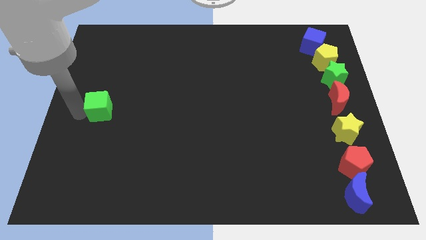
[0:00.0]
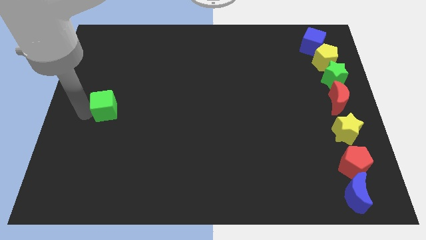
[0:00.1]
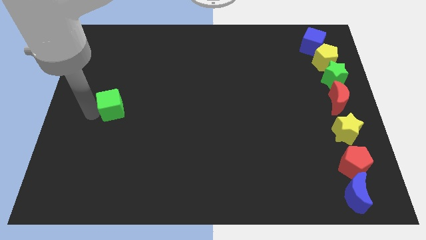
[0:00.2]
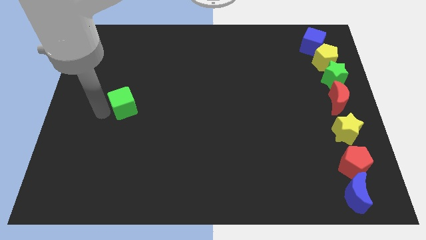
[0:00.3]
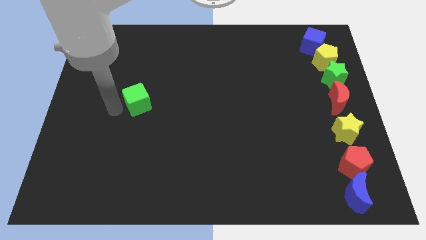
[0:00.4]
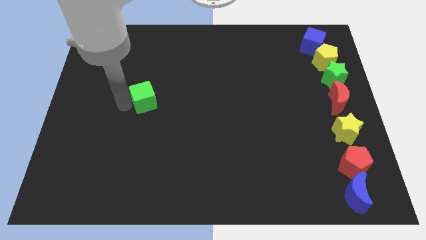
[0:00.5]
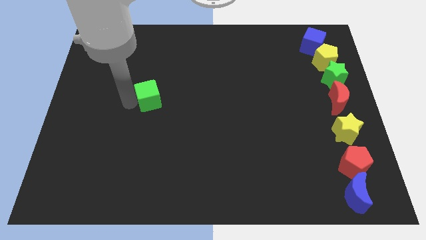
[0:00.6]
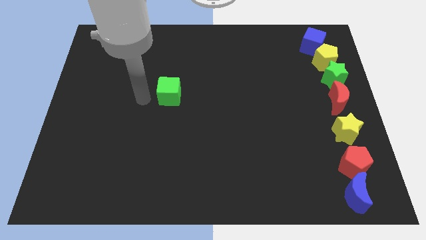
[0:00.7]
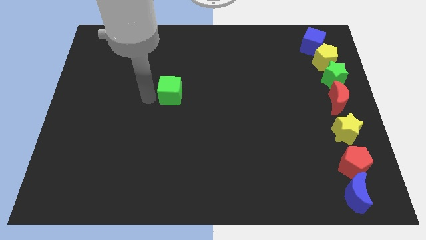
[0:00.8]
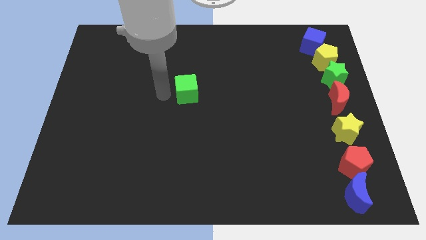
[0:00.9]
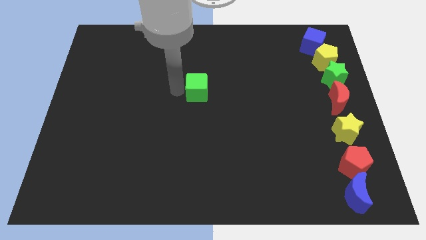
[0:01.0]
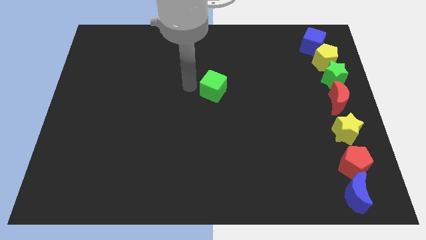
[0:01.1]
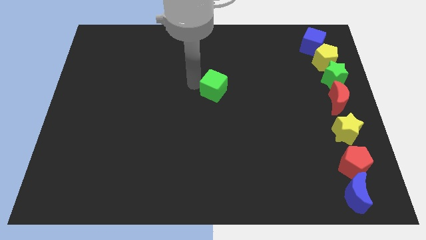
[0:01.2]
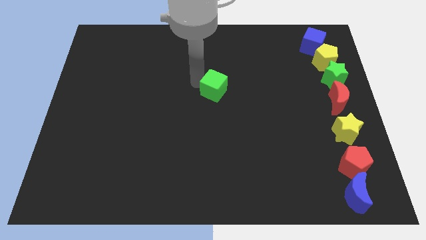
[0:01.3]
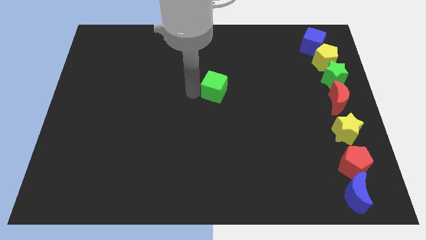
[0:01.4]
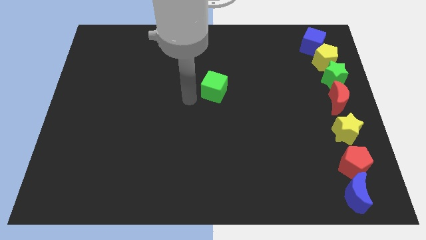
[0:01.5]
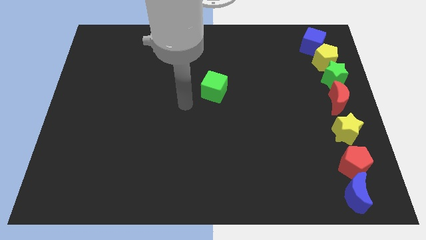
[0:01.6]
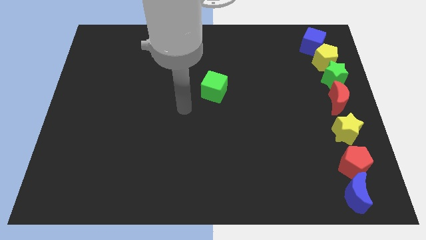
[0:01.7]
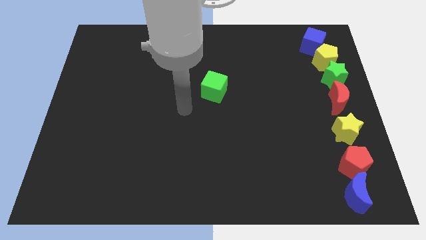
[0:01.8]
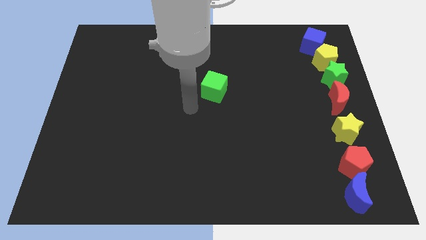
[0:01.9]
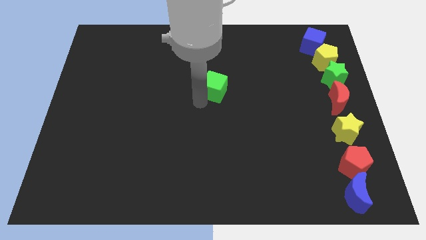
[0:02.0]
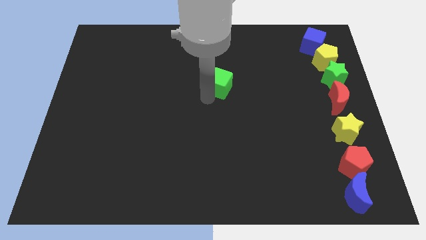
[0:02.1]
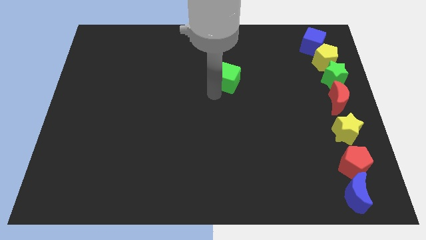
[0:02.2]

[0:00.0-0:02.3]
place green cube parallel to green star

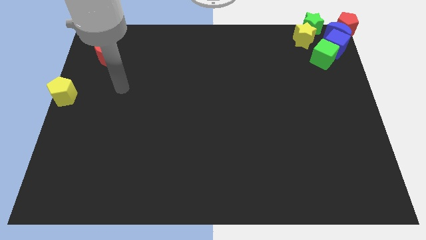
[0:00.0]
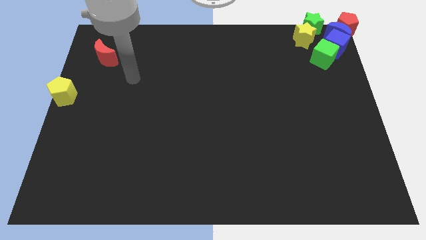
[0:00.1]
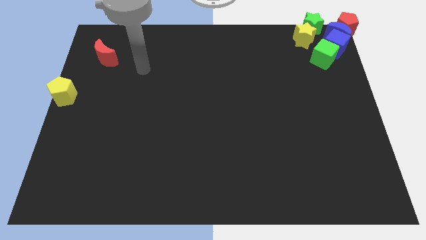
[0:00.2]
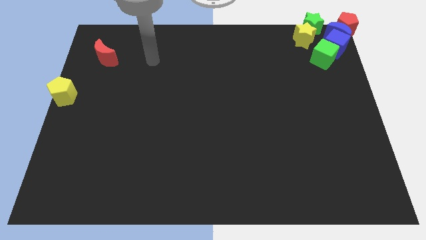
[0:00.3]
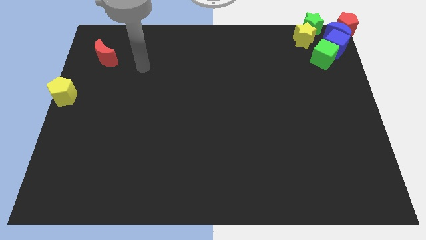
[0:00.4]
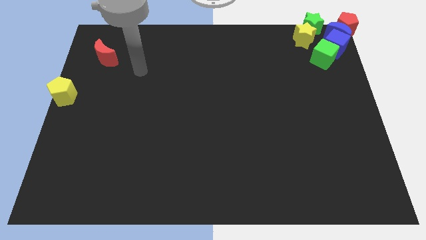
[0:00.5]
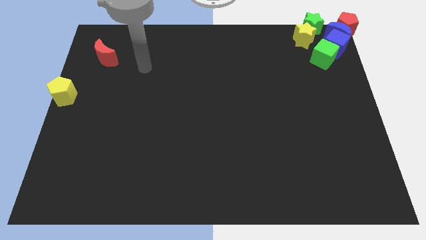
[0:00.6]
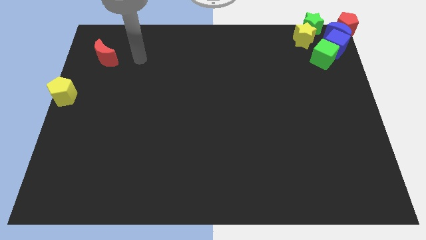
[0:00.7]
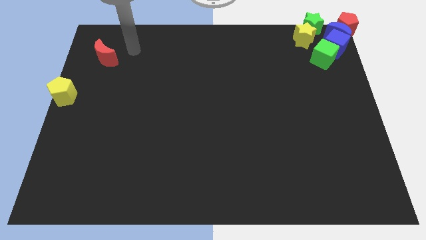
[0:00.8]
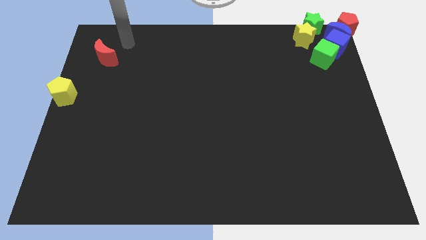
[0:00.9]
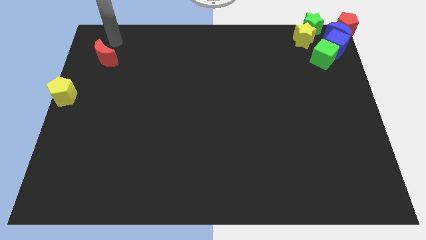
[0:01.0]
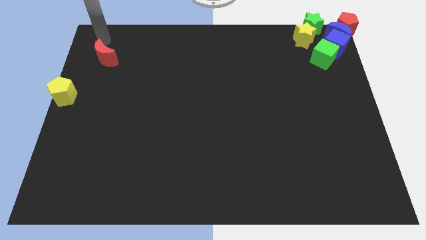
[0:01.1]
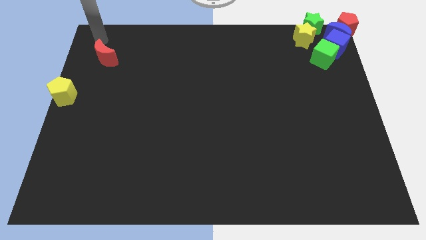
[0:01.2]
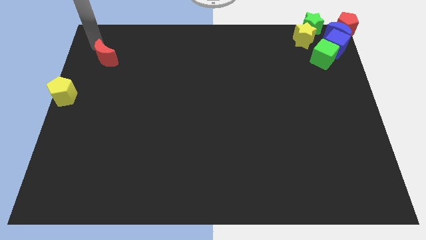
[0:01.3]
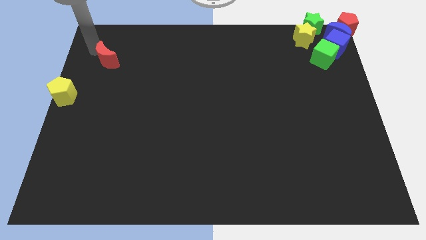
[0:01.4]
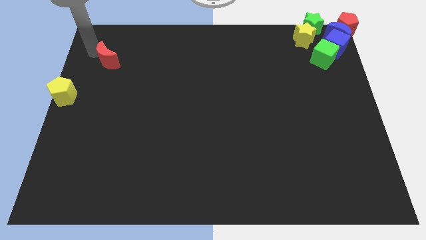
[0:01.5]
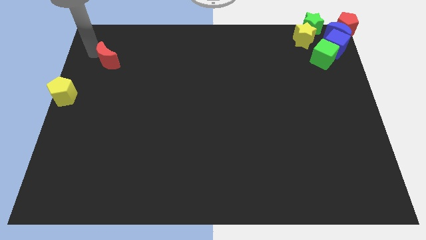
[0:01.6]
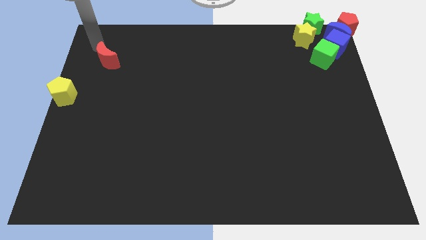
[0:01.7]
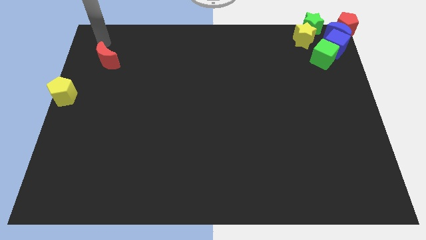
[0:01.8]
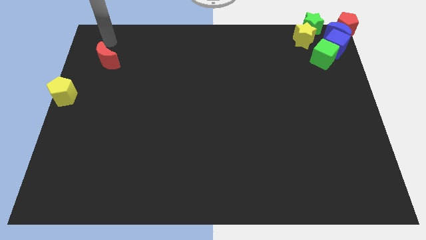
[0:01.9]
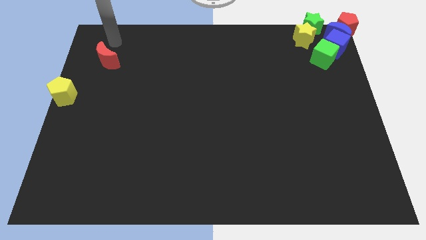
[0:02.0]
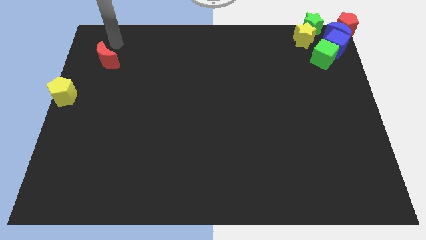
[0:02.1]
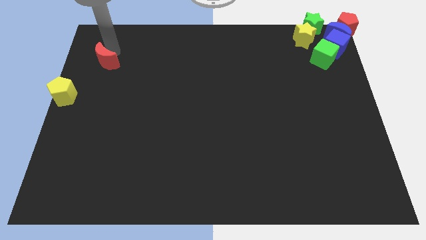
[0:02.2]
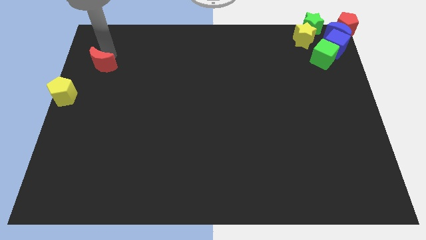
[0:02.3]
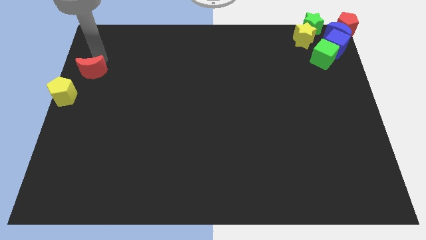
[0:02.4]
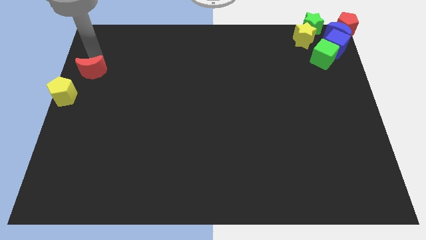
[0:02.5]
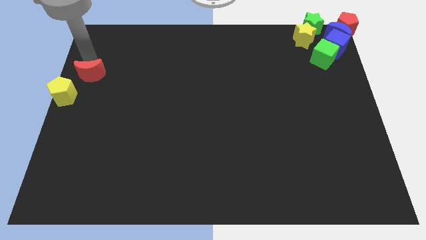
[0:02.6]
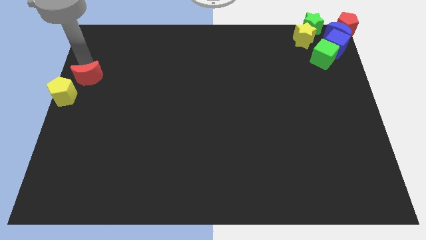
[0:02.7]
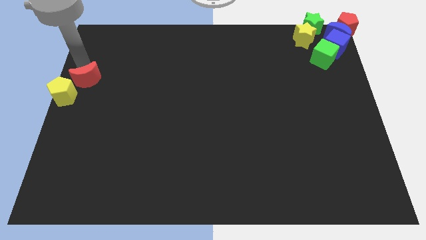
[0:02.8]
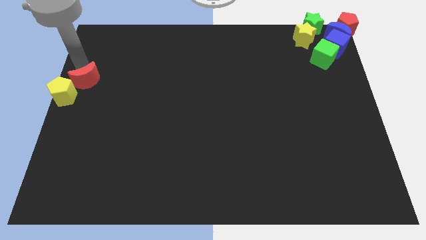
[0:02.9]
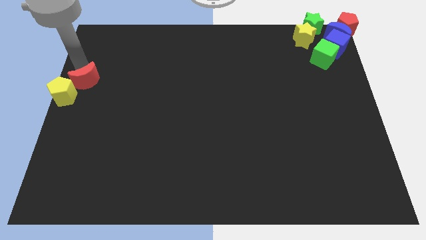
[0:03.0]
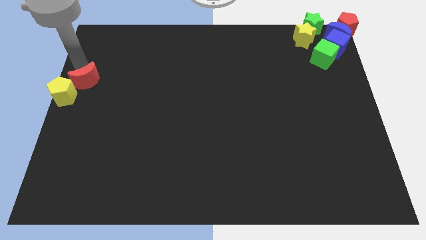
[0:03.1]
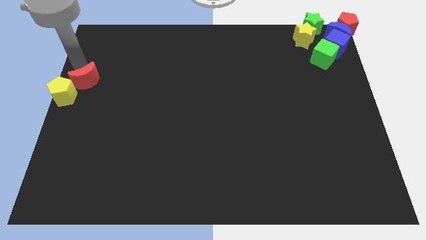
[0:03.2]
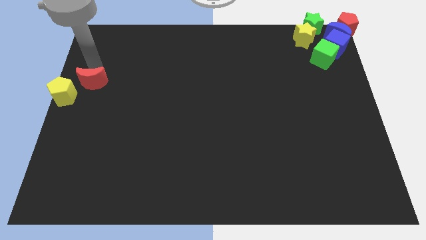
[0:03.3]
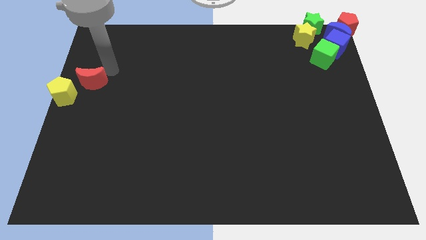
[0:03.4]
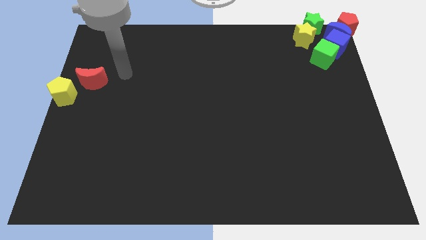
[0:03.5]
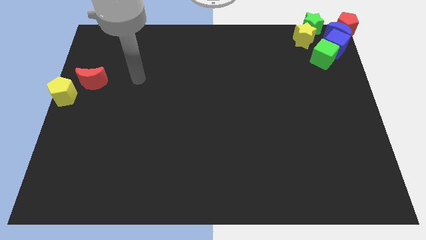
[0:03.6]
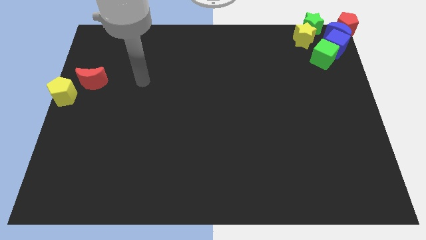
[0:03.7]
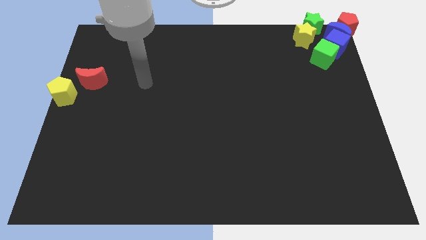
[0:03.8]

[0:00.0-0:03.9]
push the red crescent towards the top right of the yellow pentagon

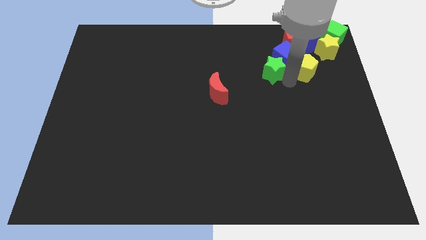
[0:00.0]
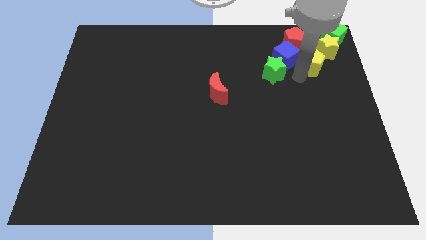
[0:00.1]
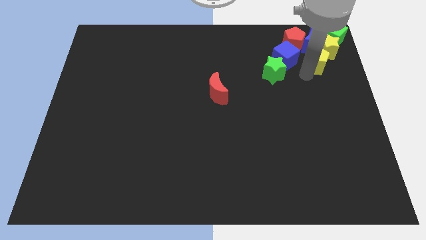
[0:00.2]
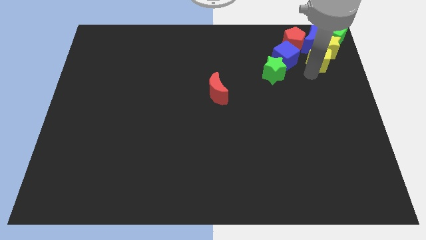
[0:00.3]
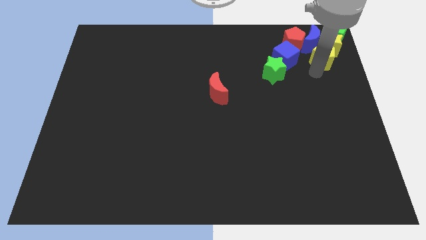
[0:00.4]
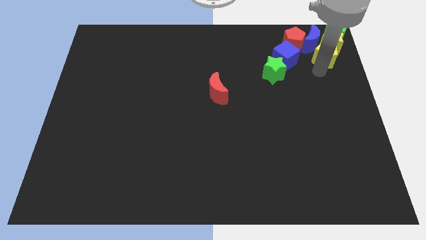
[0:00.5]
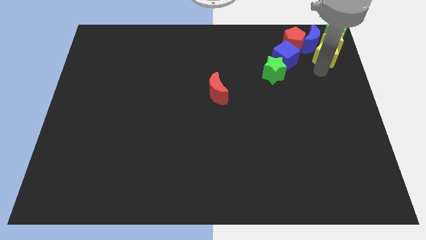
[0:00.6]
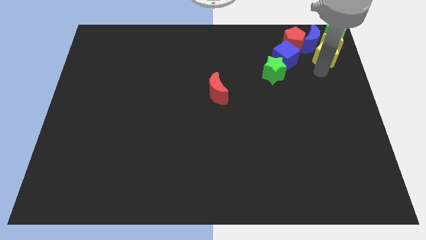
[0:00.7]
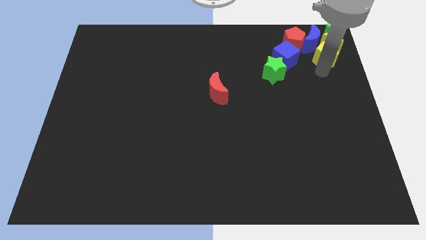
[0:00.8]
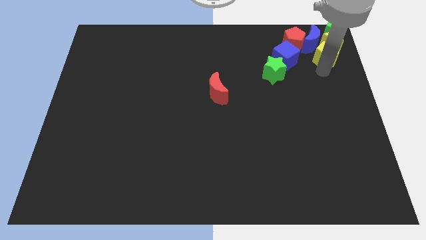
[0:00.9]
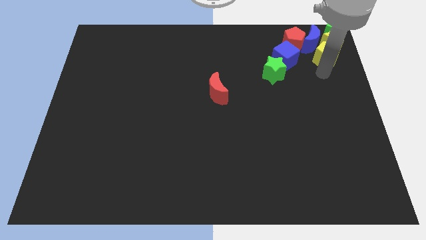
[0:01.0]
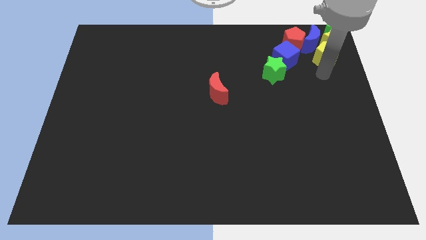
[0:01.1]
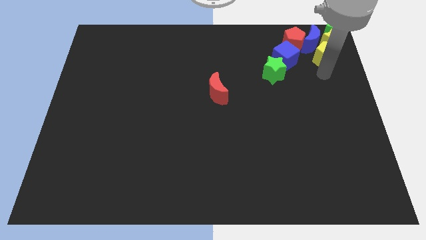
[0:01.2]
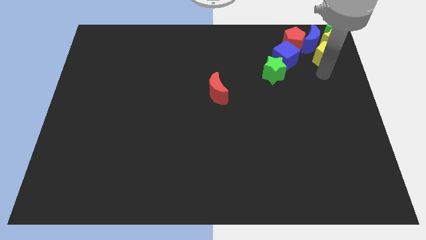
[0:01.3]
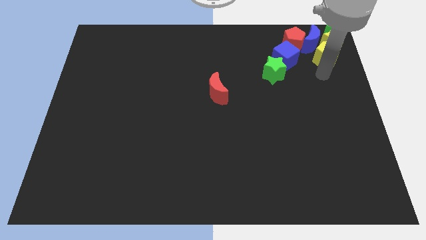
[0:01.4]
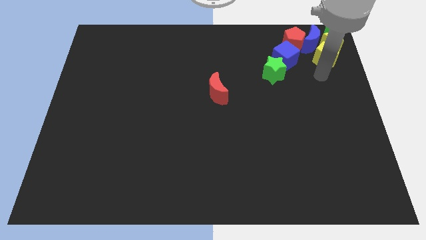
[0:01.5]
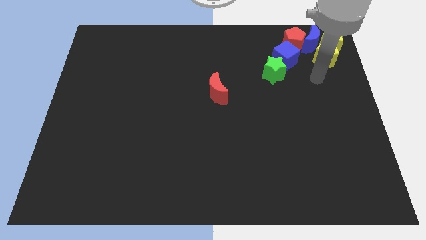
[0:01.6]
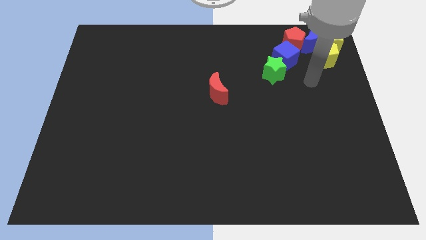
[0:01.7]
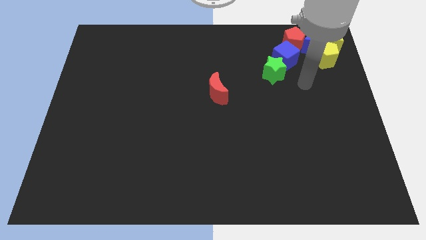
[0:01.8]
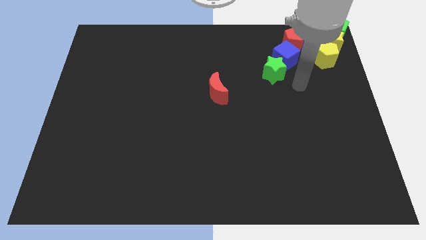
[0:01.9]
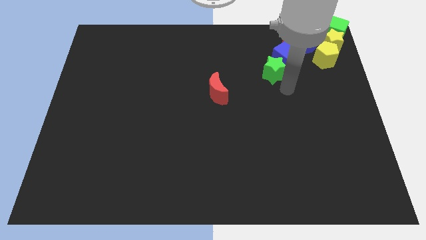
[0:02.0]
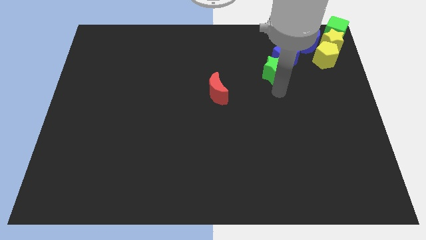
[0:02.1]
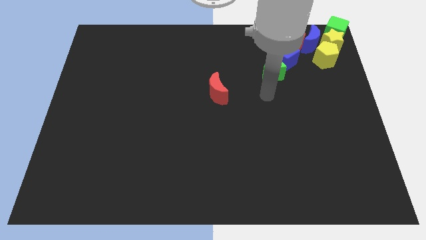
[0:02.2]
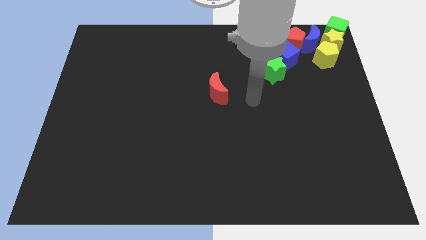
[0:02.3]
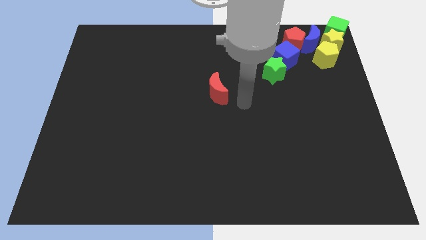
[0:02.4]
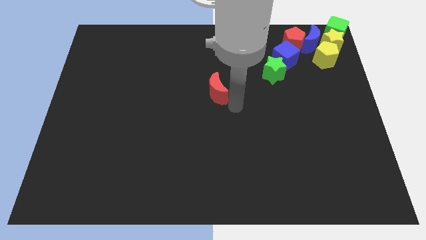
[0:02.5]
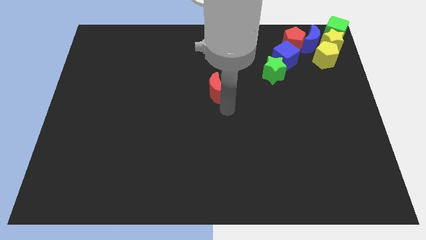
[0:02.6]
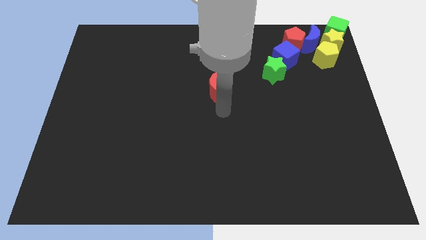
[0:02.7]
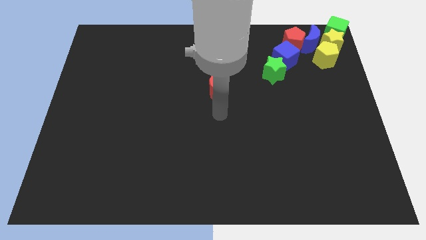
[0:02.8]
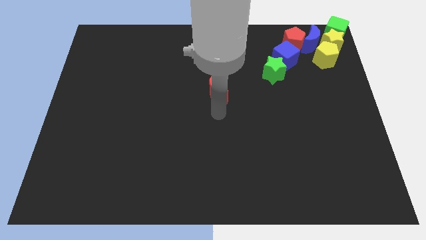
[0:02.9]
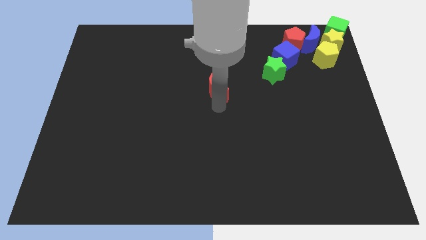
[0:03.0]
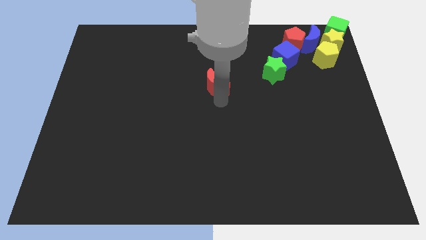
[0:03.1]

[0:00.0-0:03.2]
move your arm towards red moon
